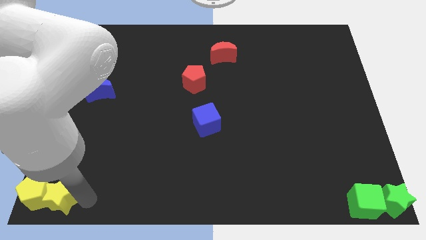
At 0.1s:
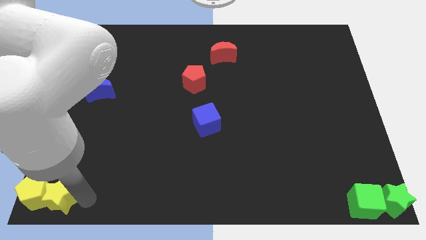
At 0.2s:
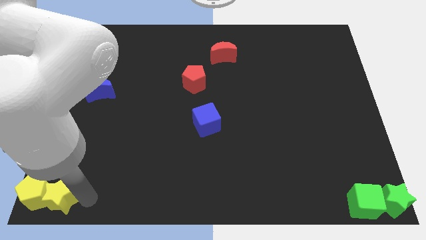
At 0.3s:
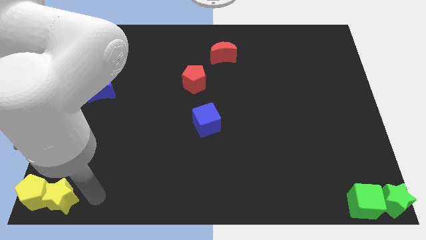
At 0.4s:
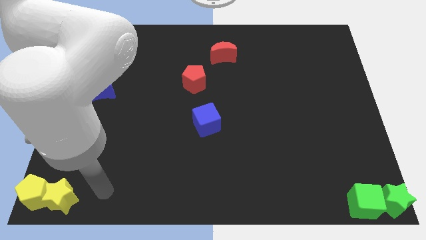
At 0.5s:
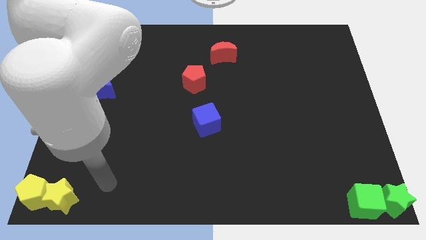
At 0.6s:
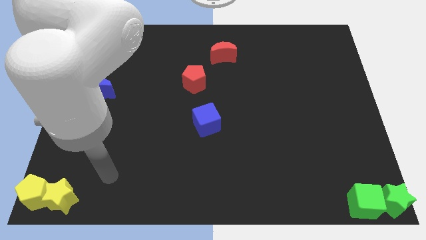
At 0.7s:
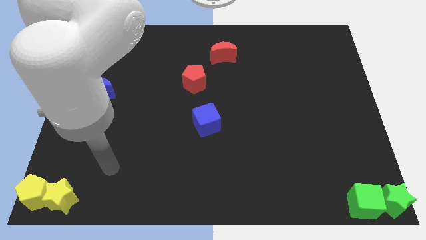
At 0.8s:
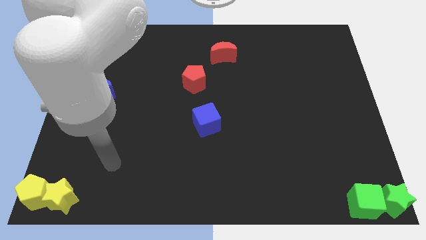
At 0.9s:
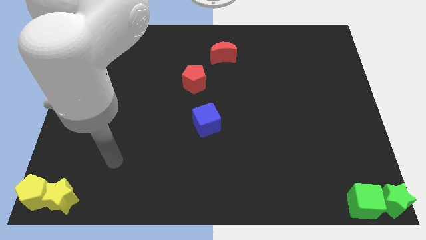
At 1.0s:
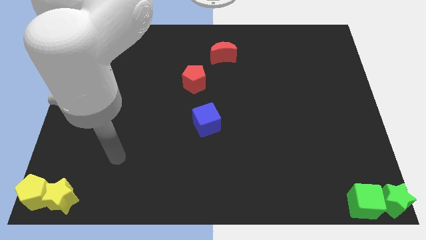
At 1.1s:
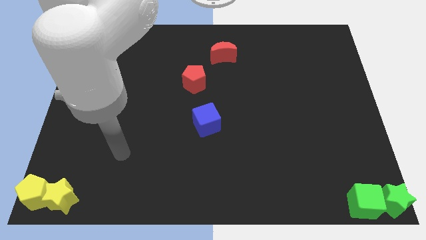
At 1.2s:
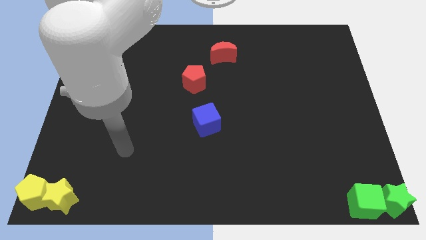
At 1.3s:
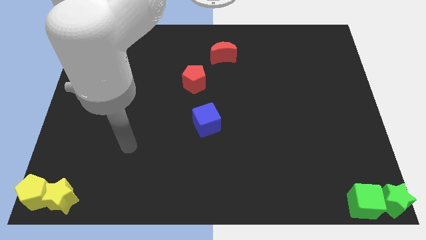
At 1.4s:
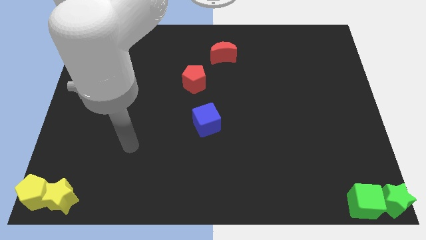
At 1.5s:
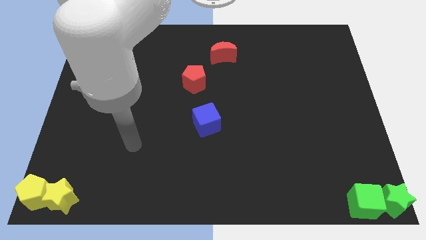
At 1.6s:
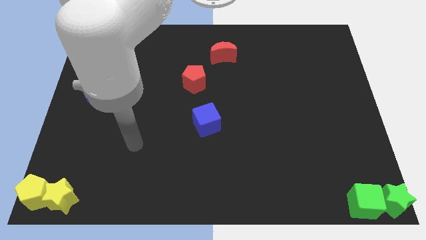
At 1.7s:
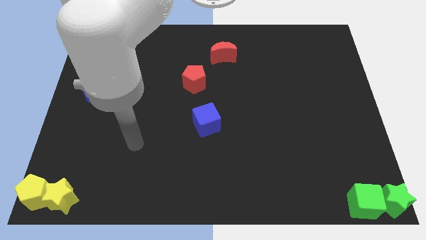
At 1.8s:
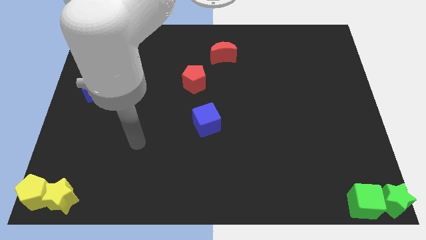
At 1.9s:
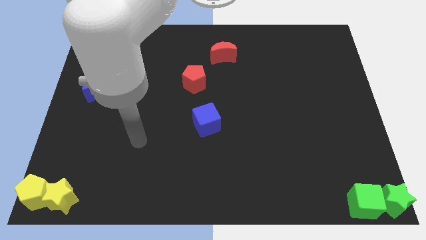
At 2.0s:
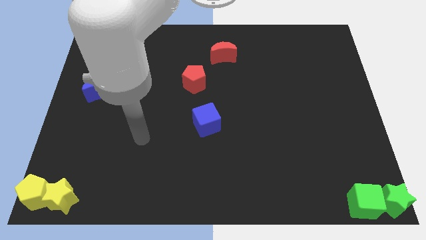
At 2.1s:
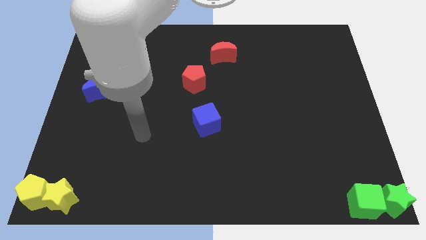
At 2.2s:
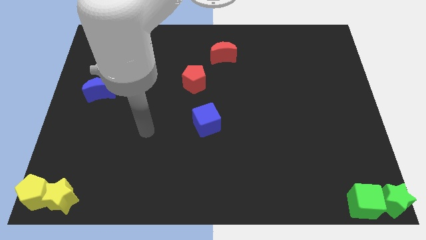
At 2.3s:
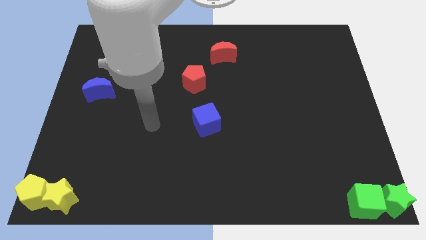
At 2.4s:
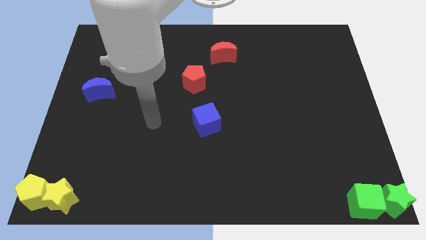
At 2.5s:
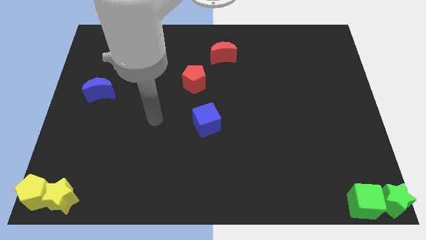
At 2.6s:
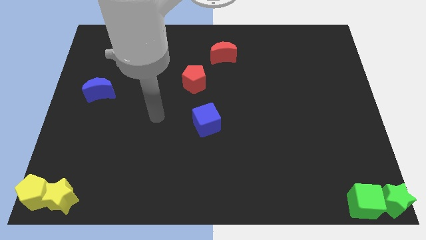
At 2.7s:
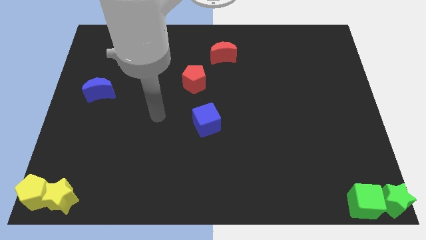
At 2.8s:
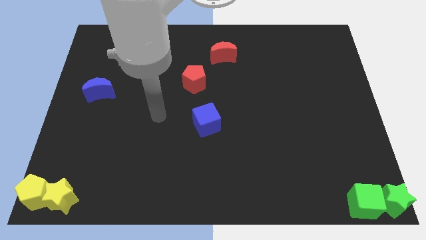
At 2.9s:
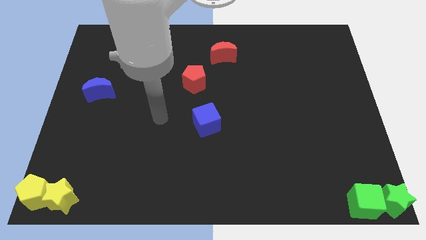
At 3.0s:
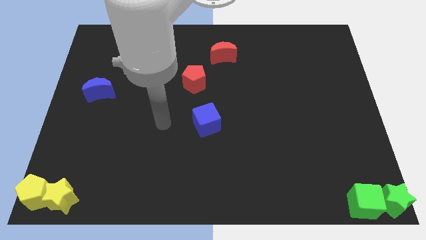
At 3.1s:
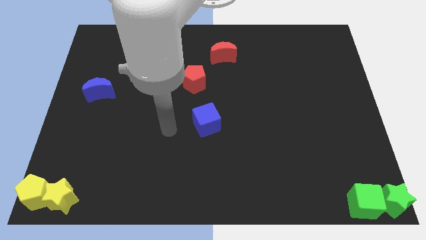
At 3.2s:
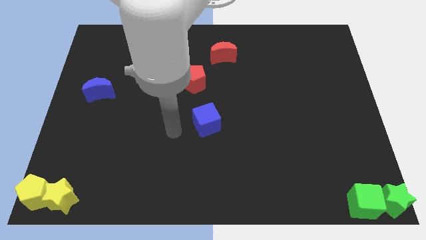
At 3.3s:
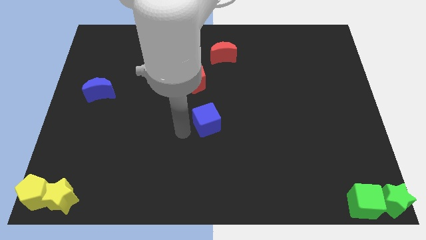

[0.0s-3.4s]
move the arm left to the blue cube

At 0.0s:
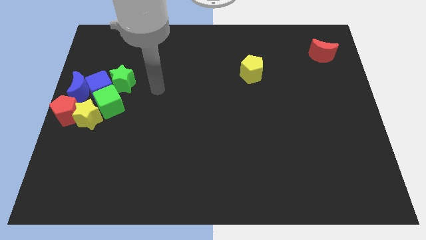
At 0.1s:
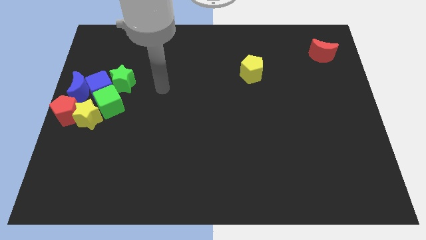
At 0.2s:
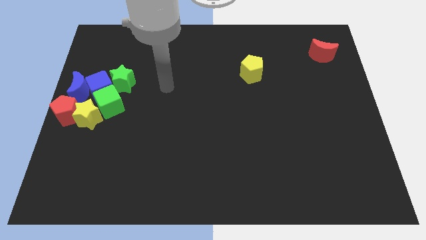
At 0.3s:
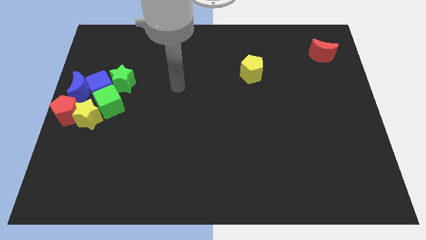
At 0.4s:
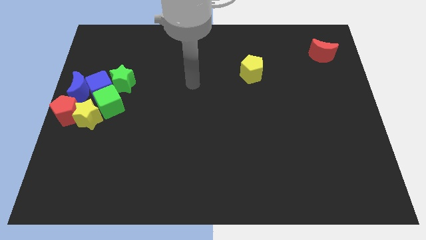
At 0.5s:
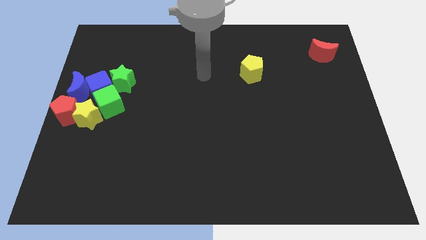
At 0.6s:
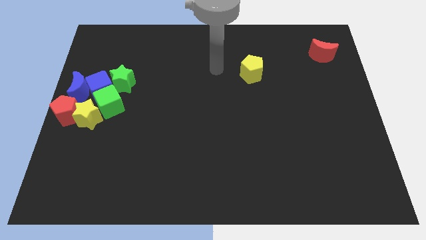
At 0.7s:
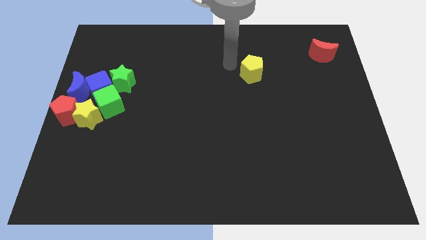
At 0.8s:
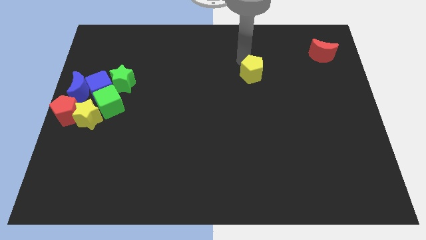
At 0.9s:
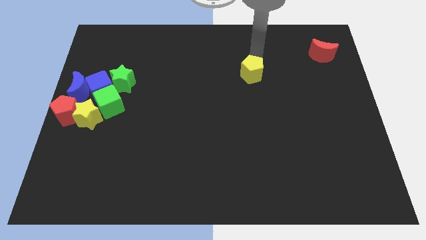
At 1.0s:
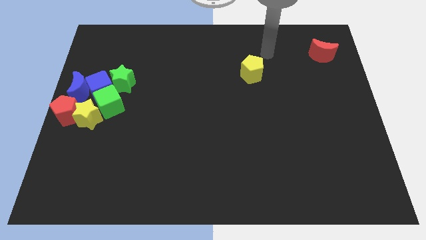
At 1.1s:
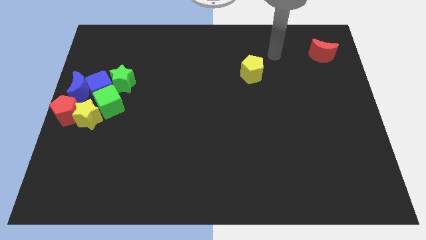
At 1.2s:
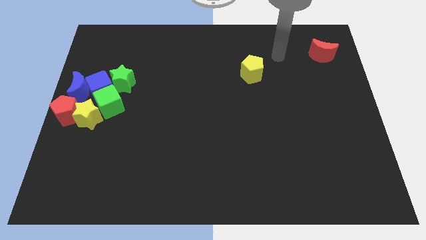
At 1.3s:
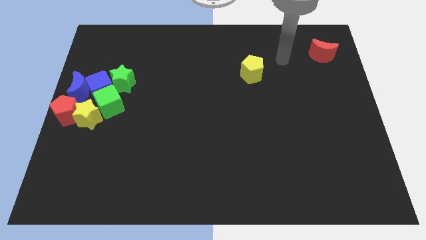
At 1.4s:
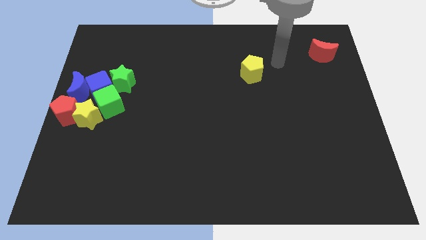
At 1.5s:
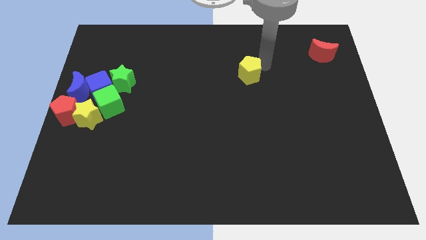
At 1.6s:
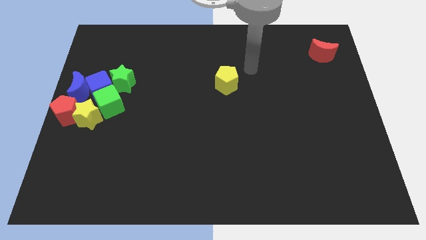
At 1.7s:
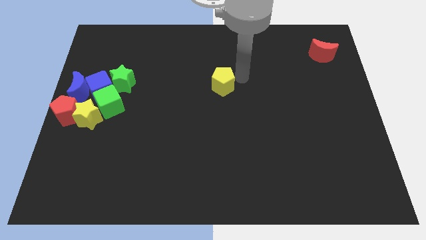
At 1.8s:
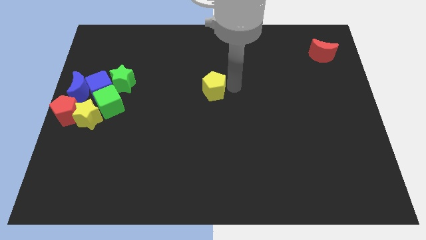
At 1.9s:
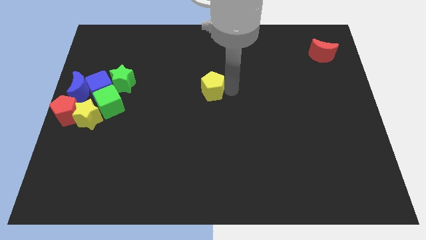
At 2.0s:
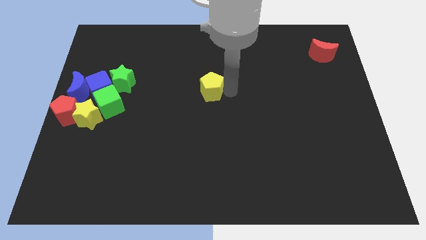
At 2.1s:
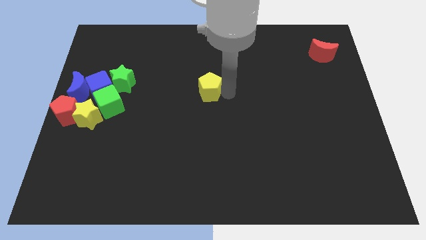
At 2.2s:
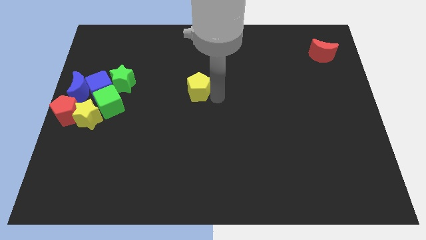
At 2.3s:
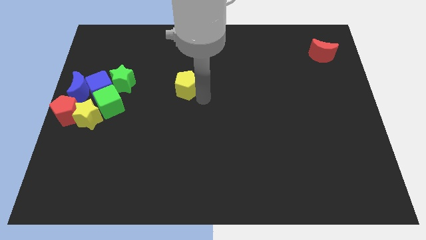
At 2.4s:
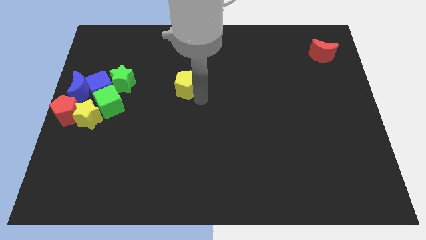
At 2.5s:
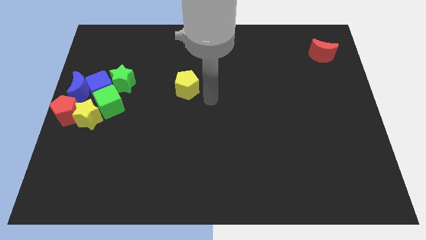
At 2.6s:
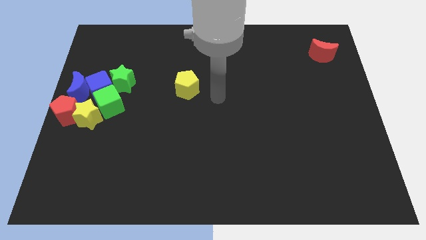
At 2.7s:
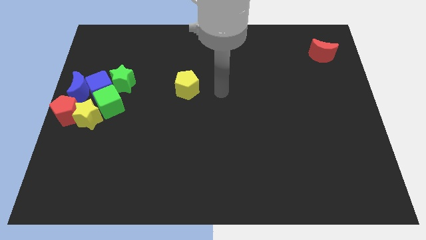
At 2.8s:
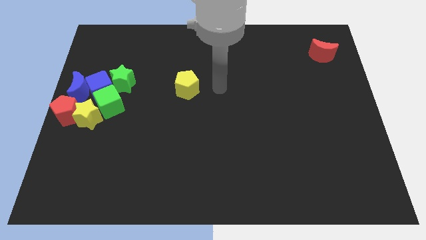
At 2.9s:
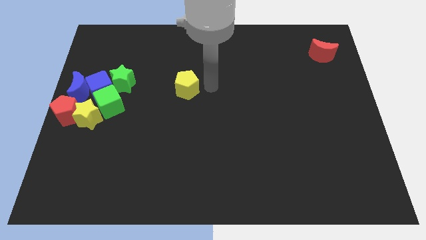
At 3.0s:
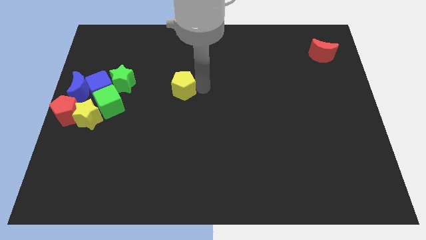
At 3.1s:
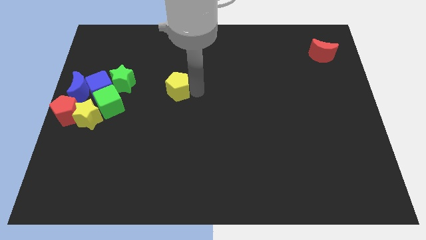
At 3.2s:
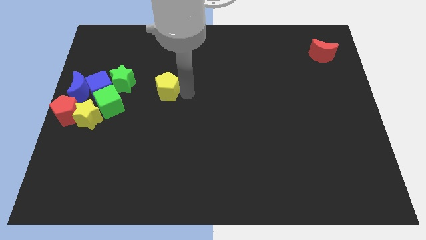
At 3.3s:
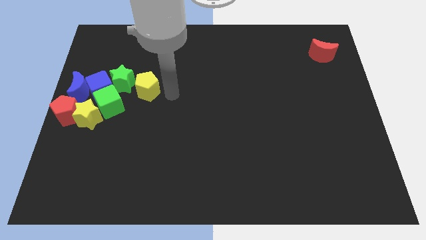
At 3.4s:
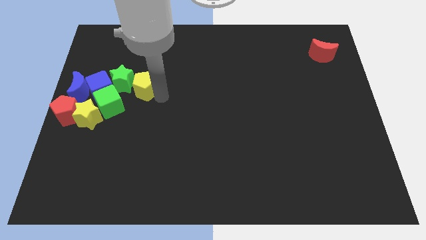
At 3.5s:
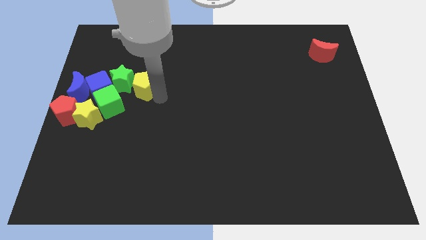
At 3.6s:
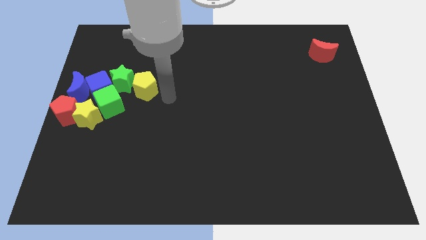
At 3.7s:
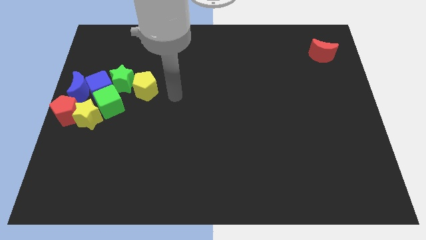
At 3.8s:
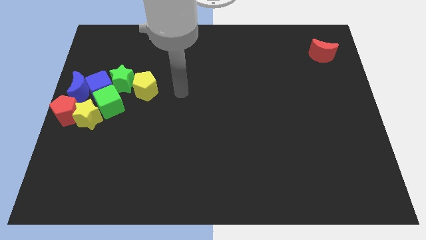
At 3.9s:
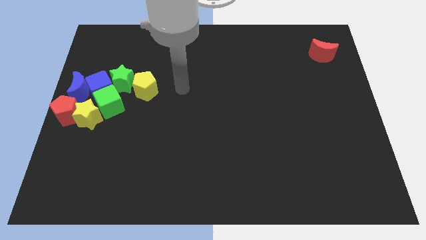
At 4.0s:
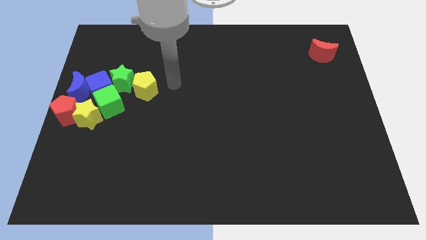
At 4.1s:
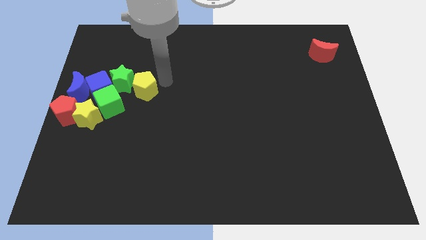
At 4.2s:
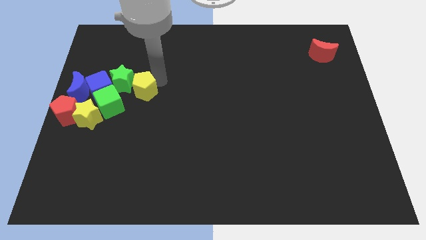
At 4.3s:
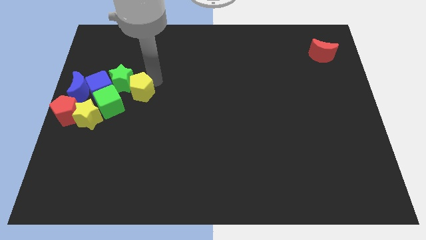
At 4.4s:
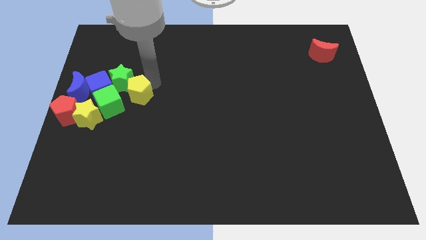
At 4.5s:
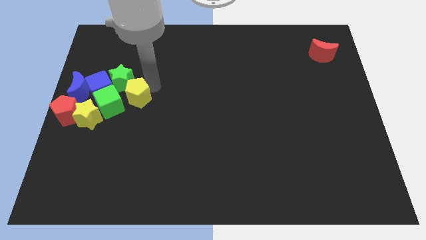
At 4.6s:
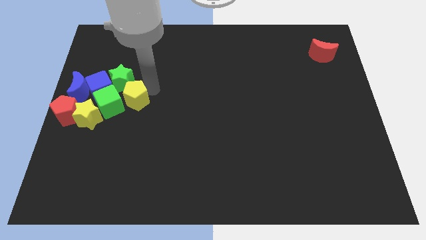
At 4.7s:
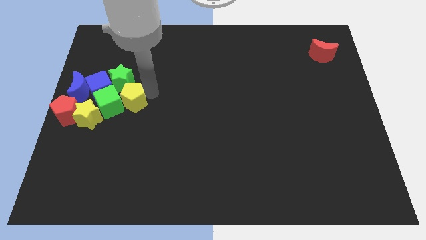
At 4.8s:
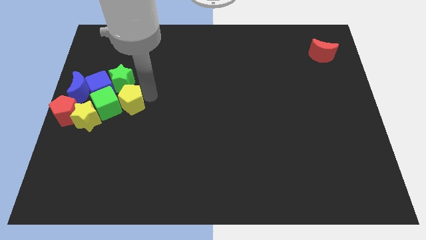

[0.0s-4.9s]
slide the yellow pentagon into the group of blocks

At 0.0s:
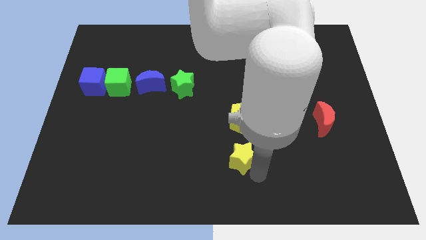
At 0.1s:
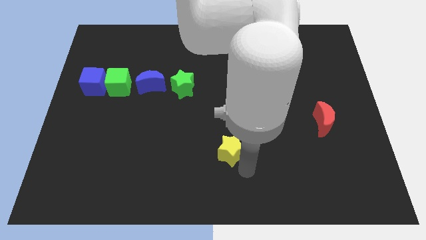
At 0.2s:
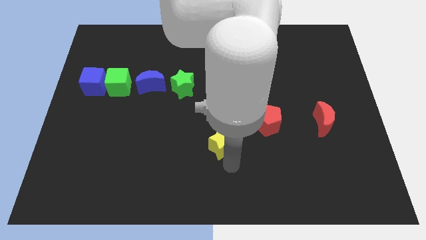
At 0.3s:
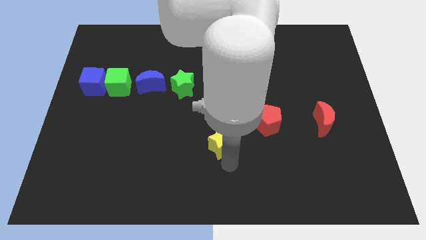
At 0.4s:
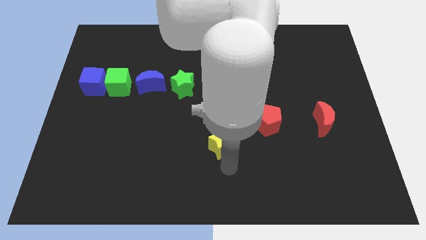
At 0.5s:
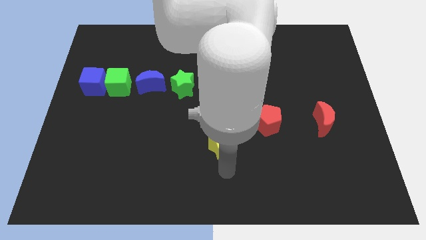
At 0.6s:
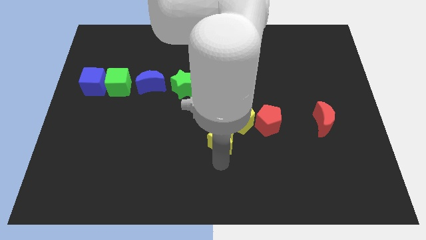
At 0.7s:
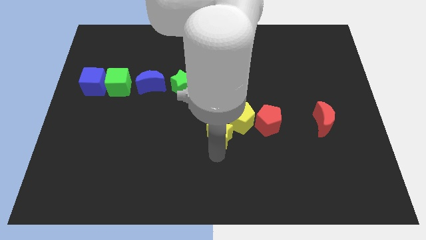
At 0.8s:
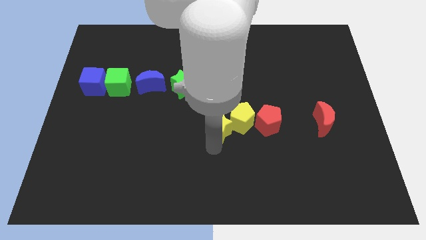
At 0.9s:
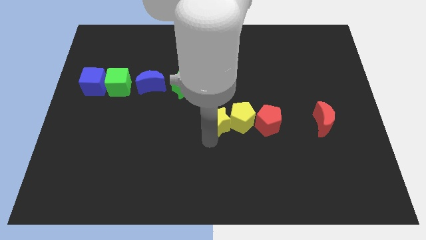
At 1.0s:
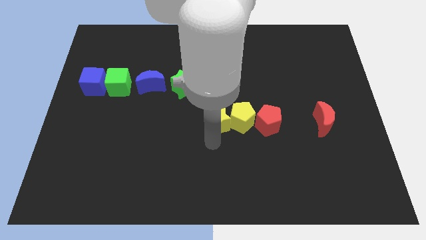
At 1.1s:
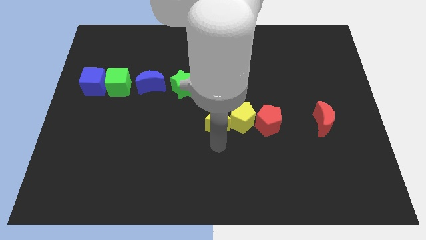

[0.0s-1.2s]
move the yellow star to the left of the yellow pentagon
